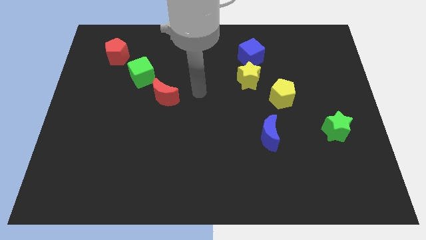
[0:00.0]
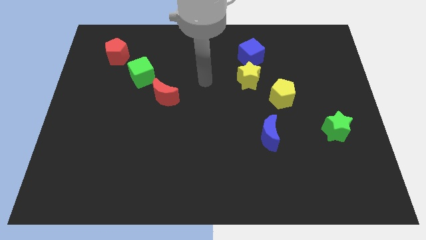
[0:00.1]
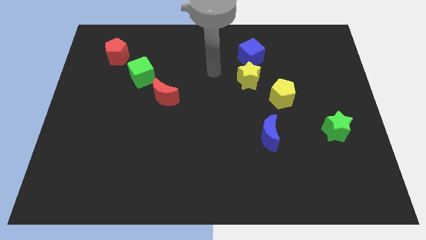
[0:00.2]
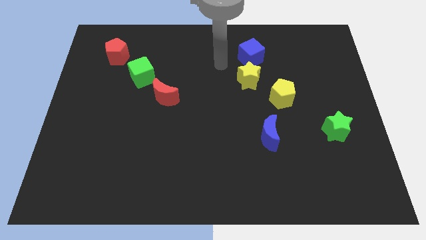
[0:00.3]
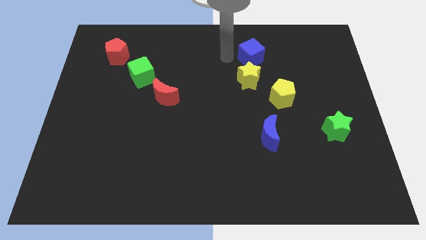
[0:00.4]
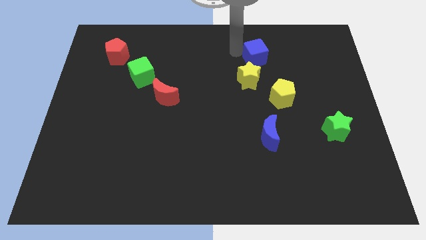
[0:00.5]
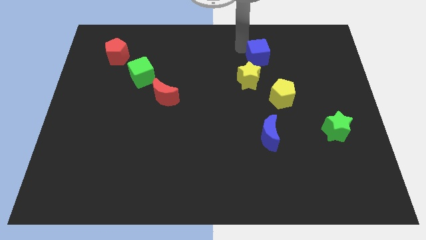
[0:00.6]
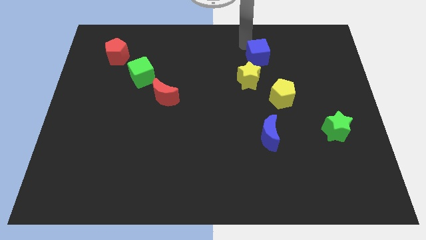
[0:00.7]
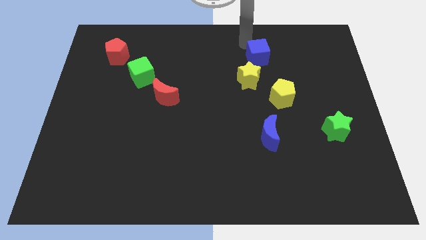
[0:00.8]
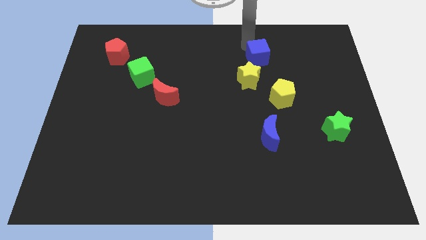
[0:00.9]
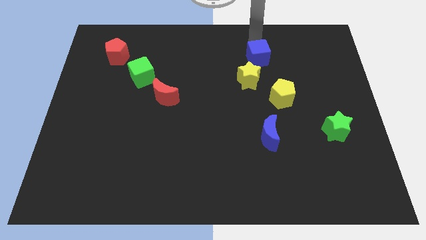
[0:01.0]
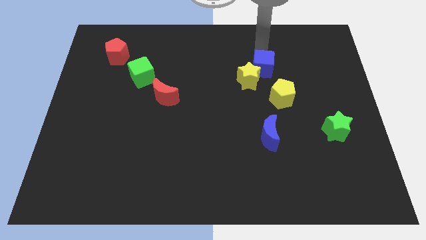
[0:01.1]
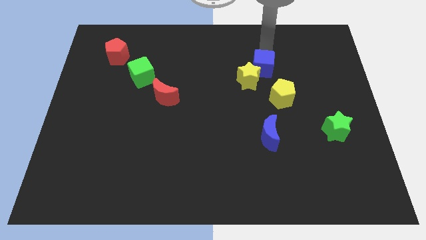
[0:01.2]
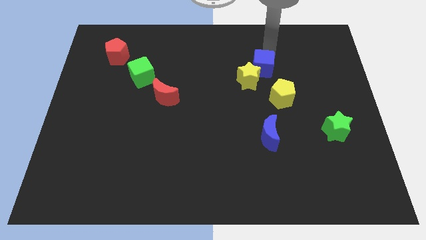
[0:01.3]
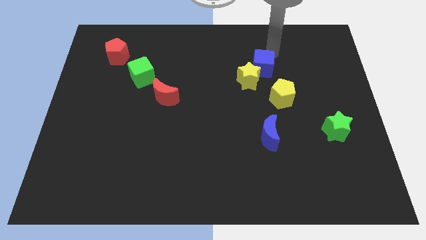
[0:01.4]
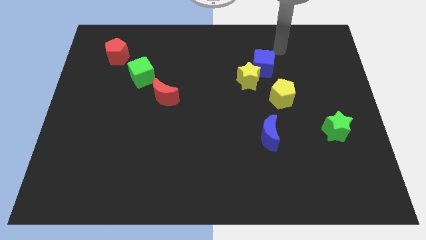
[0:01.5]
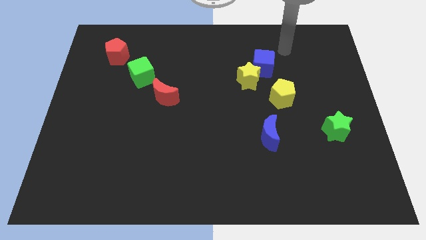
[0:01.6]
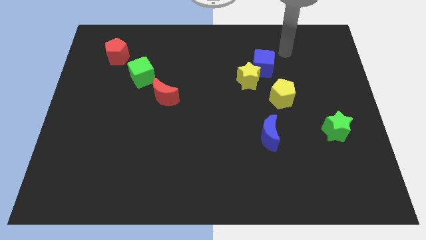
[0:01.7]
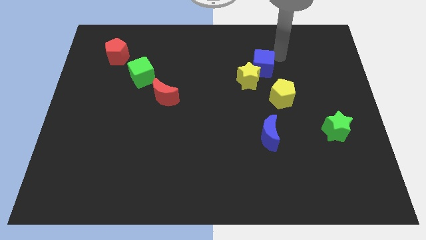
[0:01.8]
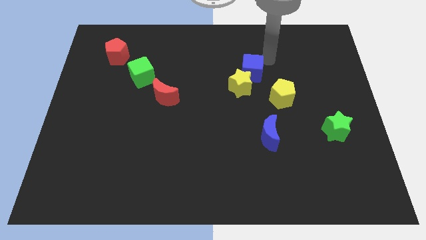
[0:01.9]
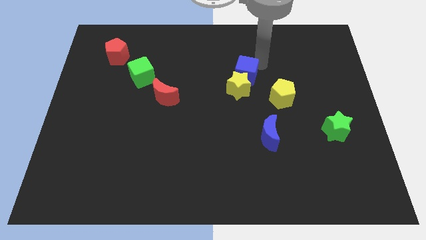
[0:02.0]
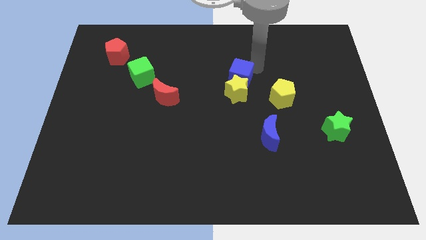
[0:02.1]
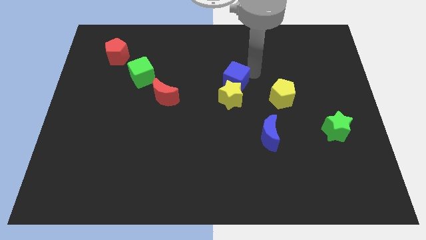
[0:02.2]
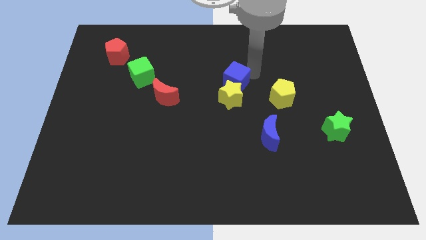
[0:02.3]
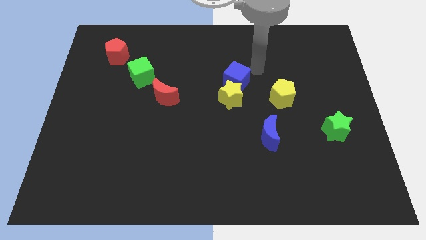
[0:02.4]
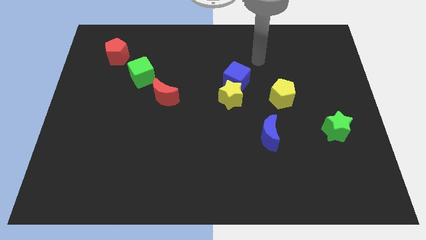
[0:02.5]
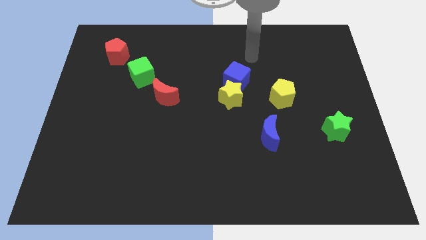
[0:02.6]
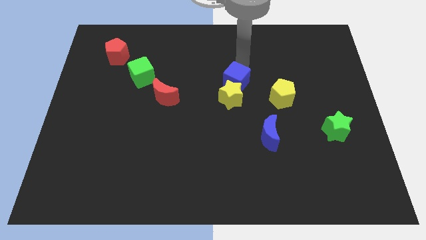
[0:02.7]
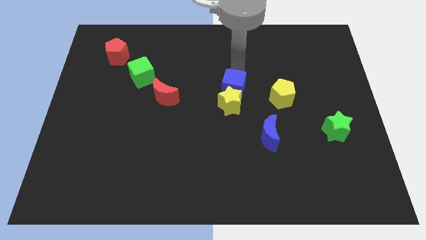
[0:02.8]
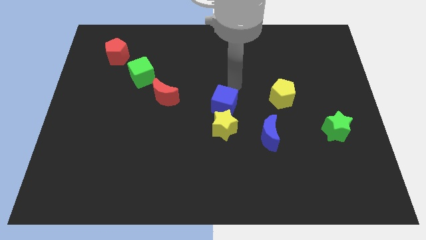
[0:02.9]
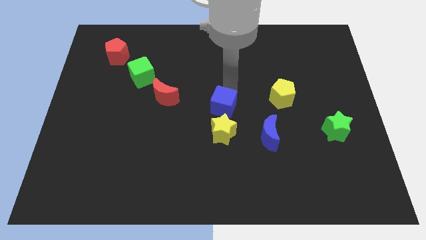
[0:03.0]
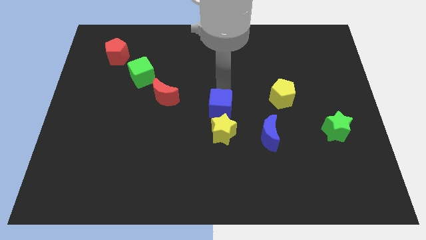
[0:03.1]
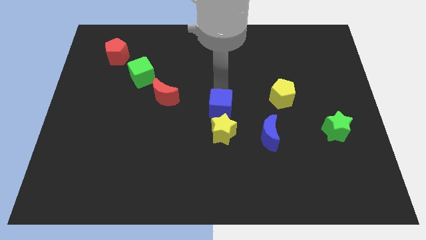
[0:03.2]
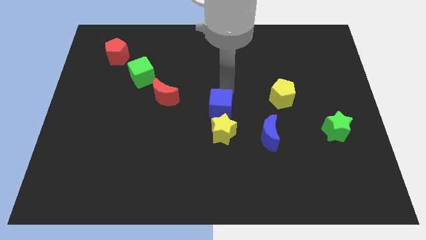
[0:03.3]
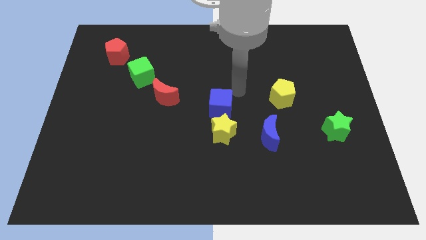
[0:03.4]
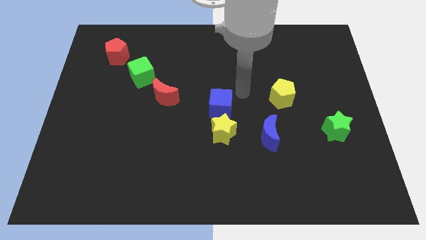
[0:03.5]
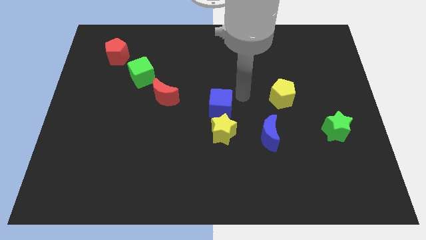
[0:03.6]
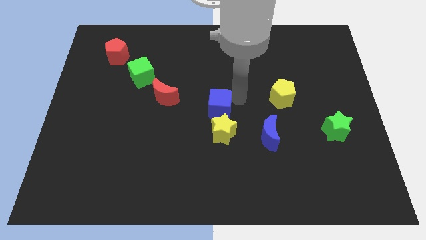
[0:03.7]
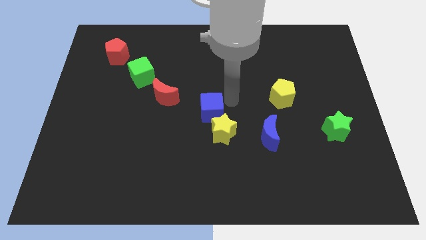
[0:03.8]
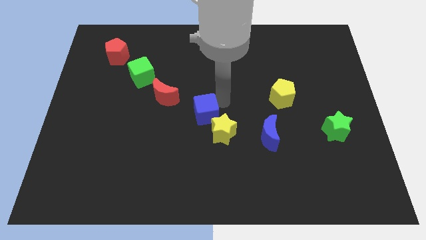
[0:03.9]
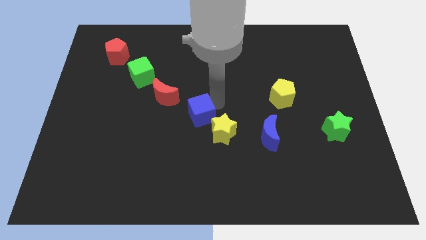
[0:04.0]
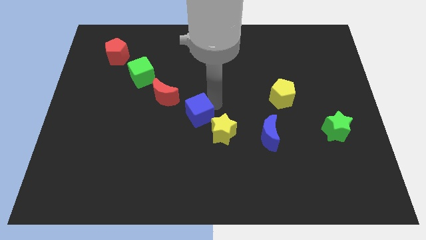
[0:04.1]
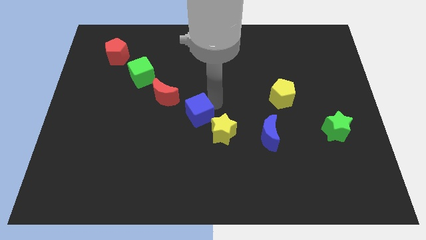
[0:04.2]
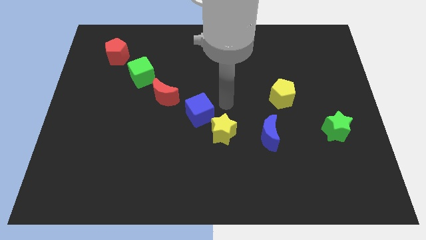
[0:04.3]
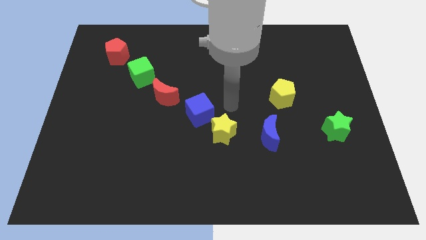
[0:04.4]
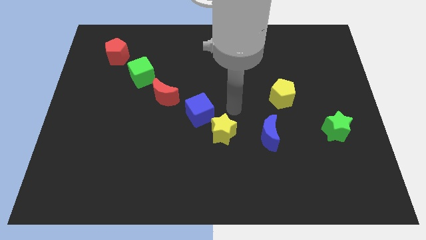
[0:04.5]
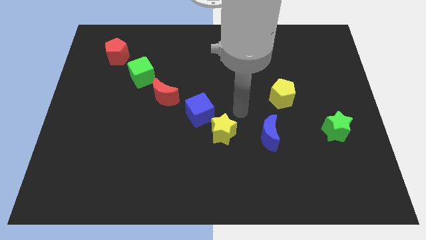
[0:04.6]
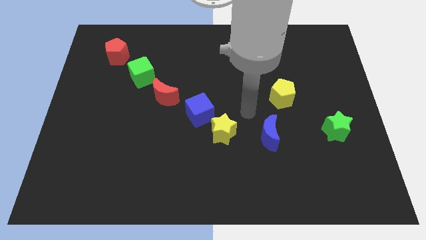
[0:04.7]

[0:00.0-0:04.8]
move the blue cube in between yellow star and red moon

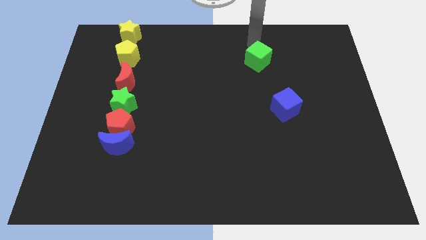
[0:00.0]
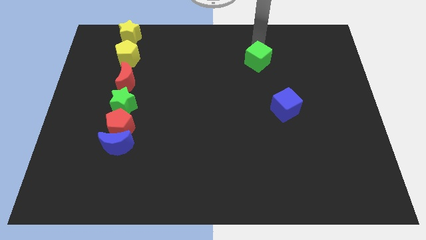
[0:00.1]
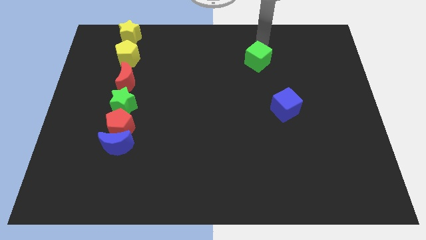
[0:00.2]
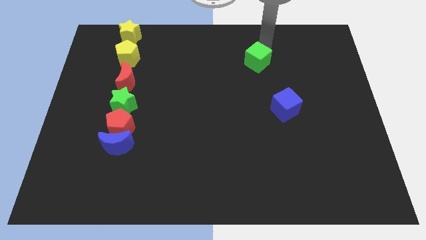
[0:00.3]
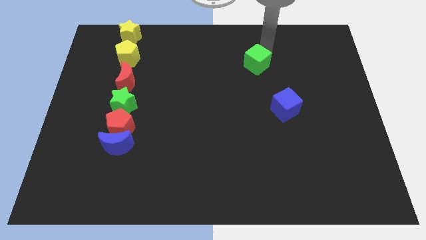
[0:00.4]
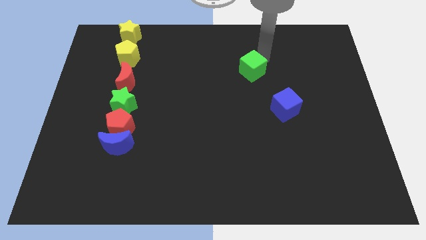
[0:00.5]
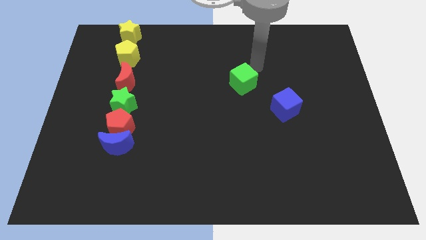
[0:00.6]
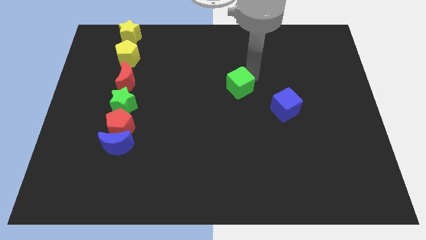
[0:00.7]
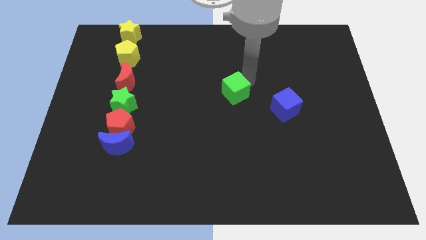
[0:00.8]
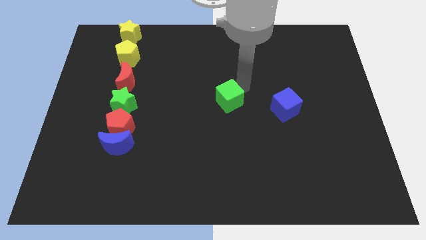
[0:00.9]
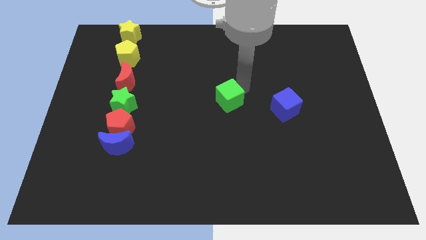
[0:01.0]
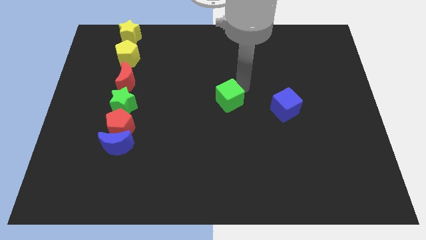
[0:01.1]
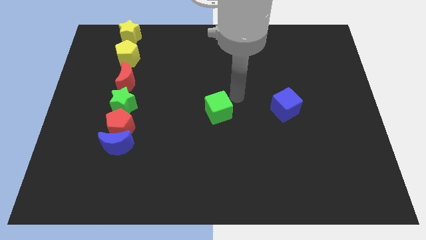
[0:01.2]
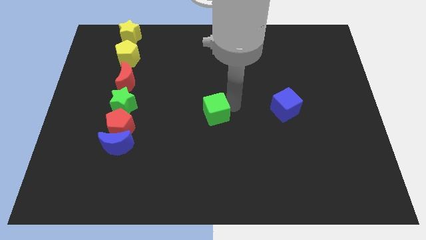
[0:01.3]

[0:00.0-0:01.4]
place the green cube left to the blue cube

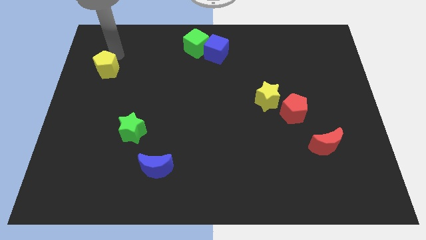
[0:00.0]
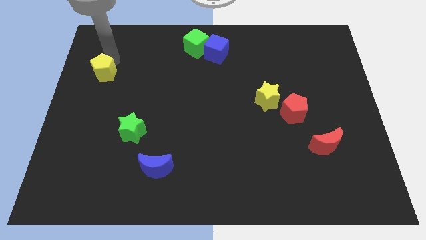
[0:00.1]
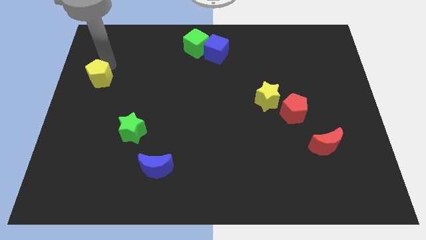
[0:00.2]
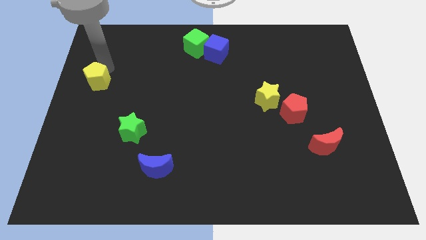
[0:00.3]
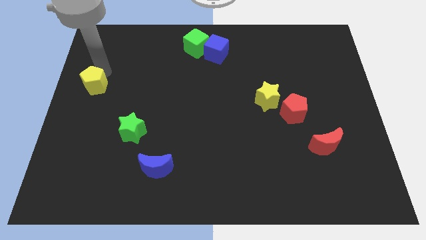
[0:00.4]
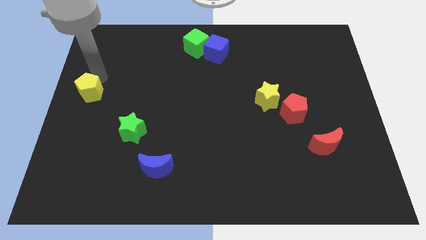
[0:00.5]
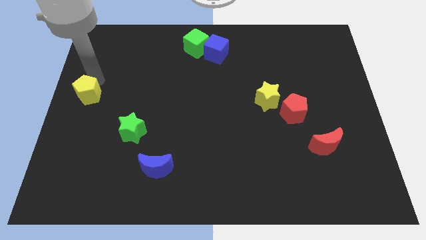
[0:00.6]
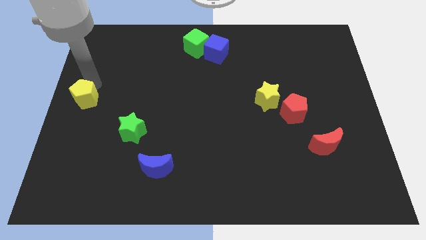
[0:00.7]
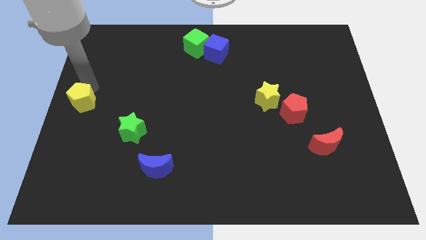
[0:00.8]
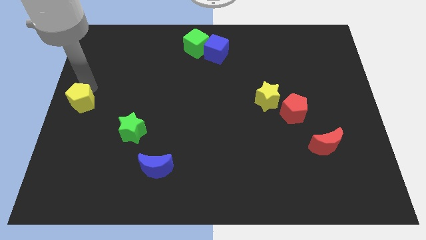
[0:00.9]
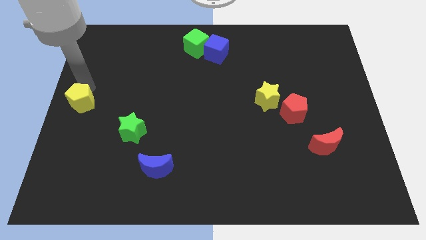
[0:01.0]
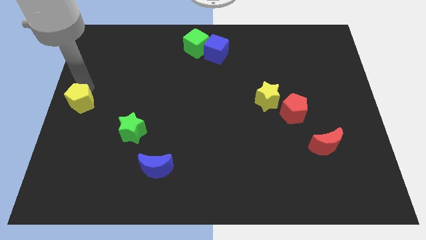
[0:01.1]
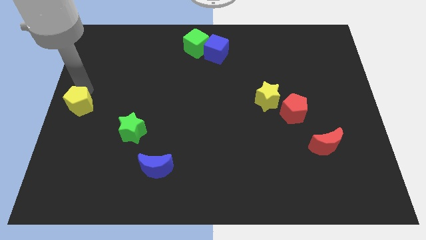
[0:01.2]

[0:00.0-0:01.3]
push yellow pentagon downwards

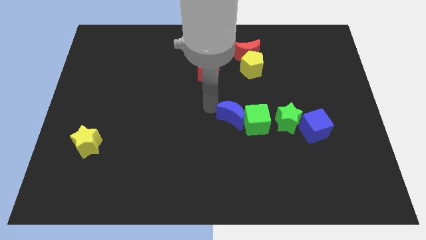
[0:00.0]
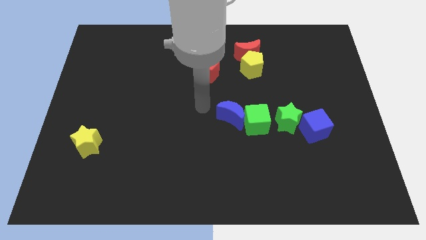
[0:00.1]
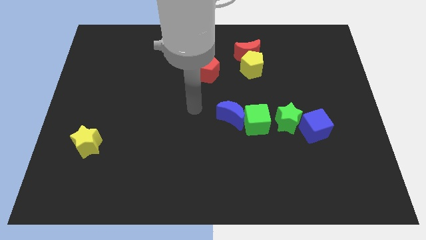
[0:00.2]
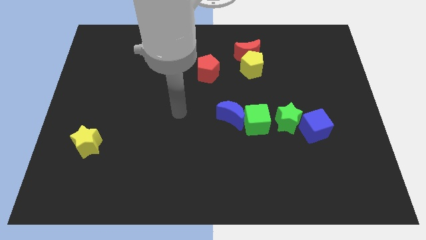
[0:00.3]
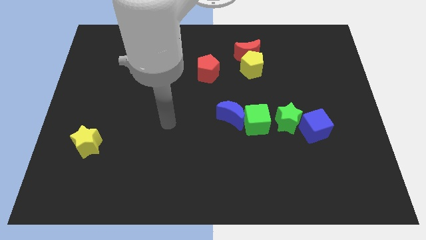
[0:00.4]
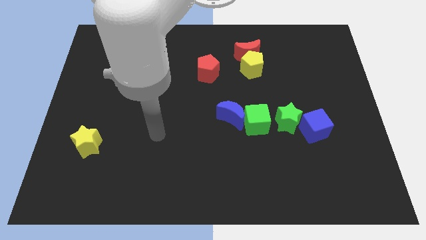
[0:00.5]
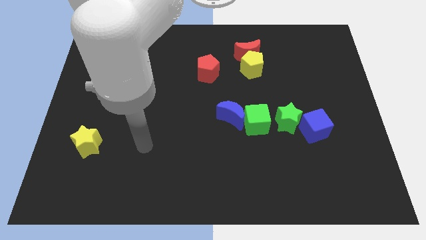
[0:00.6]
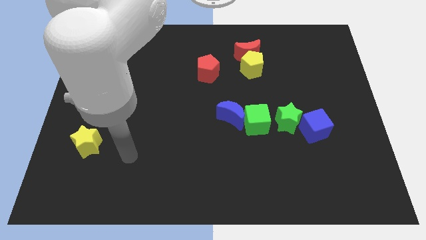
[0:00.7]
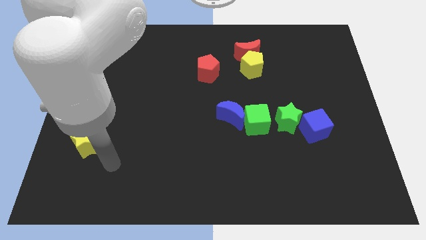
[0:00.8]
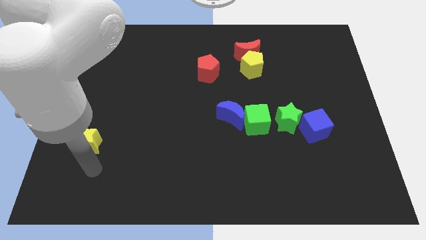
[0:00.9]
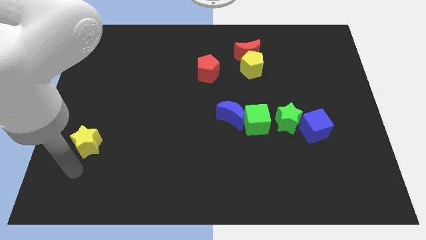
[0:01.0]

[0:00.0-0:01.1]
move your arm below the yellow star

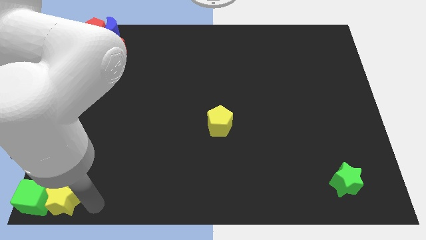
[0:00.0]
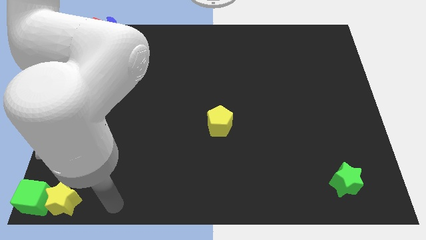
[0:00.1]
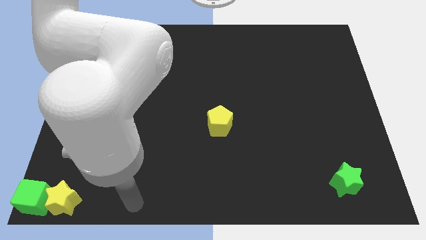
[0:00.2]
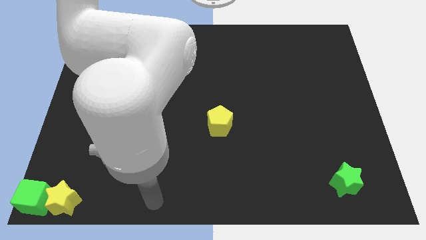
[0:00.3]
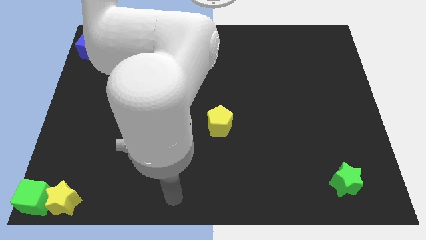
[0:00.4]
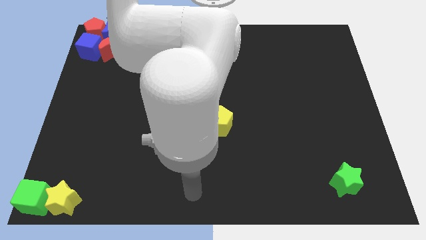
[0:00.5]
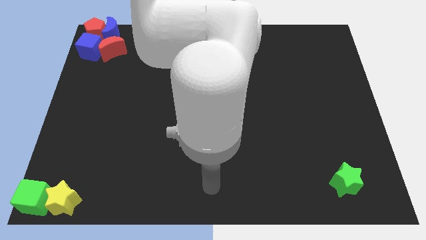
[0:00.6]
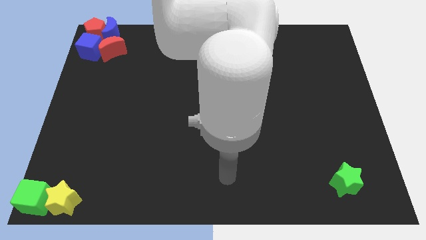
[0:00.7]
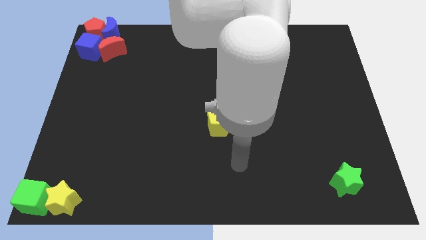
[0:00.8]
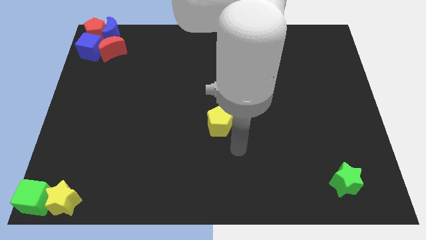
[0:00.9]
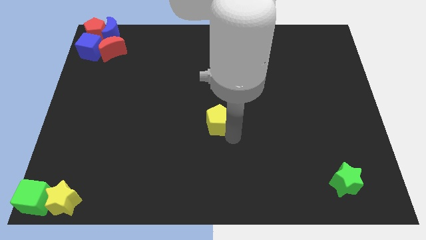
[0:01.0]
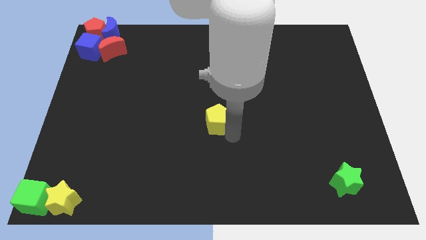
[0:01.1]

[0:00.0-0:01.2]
move your arm away from the yellow star
